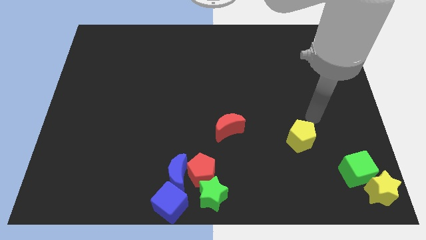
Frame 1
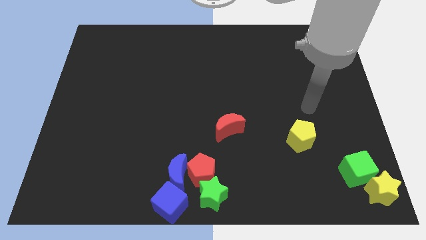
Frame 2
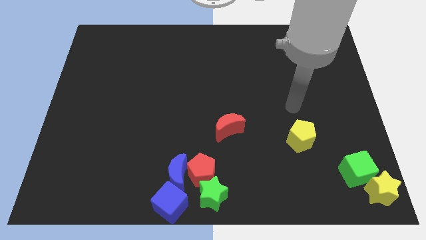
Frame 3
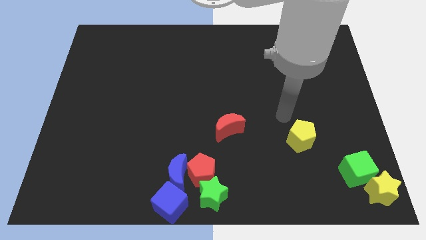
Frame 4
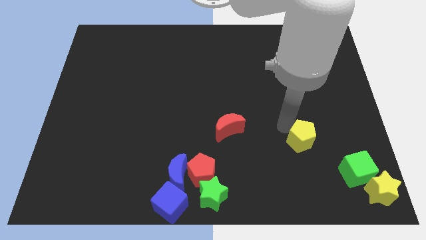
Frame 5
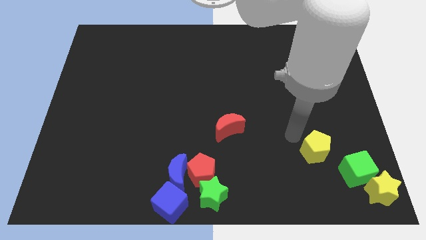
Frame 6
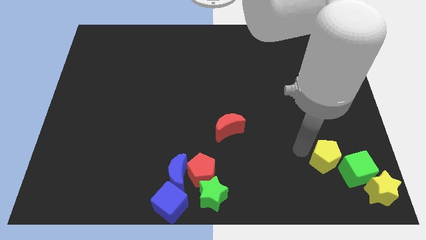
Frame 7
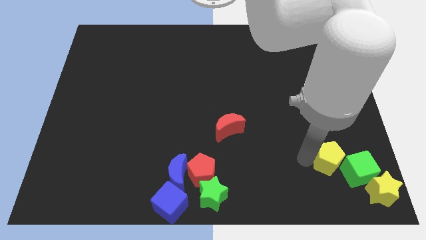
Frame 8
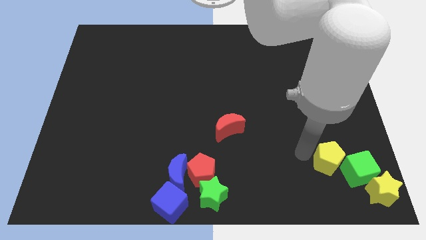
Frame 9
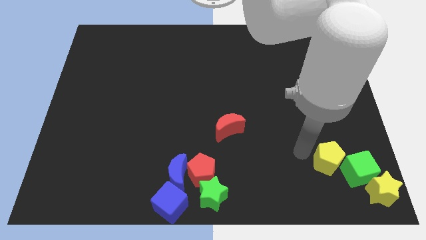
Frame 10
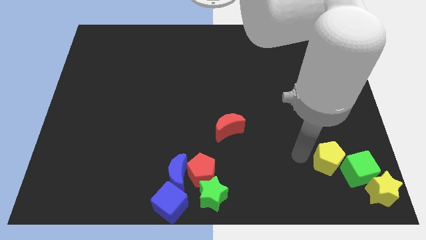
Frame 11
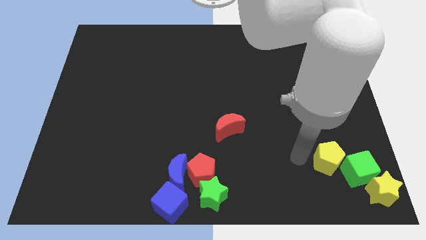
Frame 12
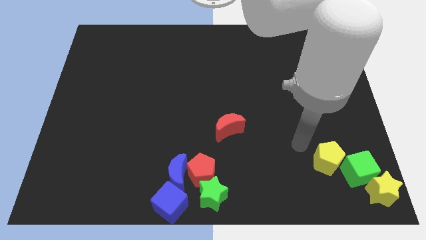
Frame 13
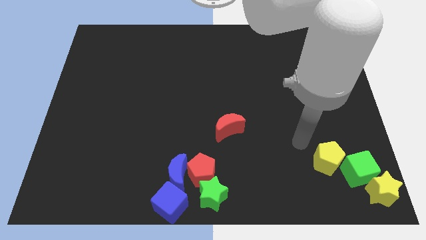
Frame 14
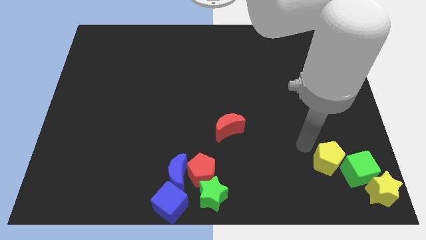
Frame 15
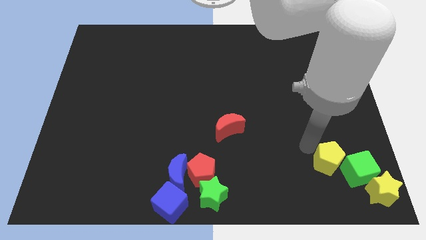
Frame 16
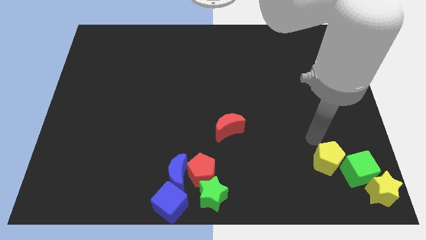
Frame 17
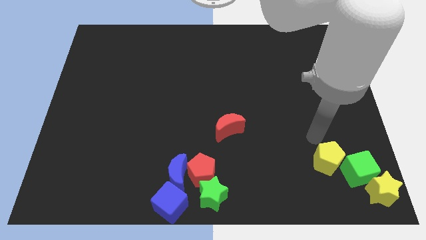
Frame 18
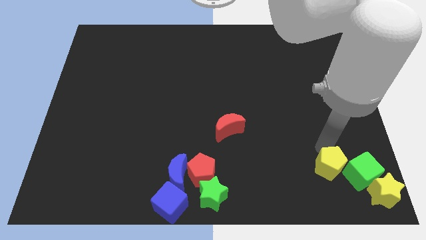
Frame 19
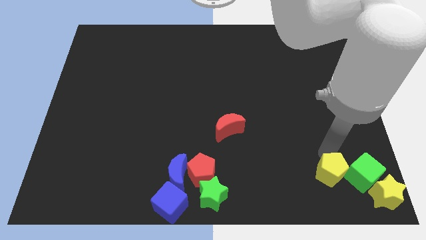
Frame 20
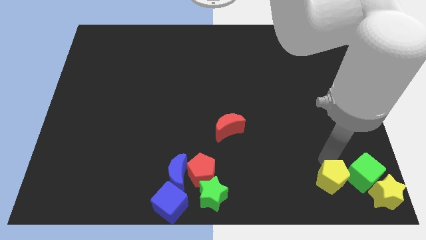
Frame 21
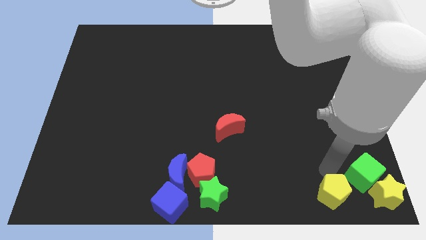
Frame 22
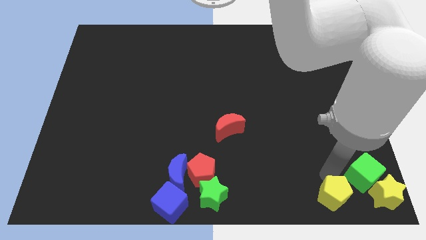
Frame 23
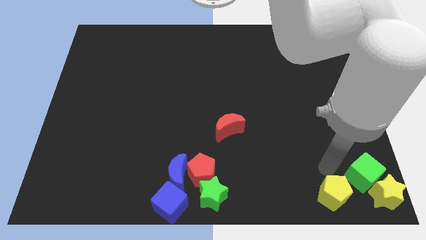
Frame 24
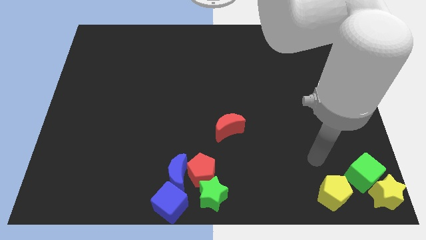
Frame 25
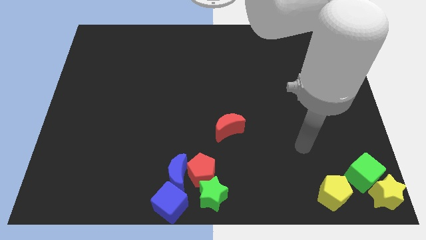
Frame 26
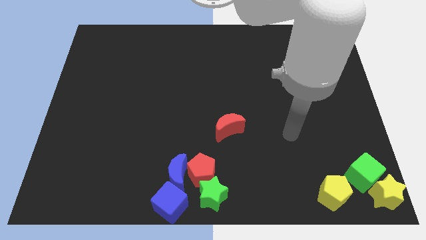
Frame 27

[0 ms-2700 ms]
move the yellow pentagon diagonally left of the green cube

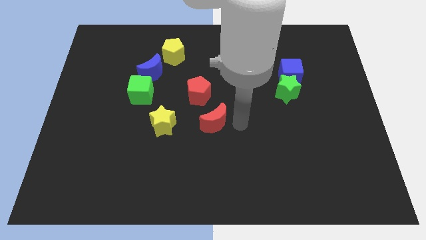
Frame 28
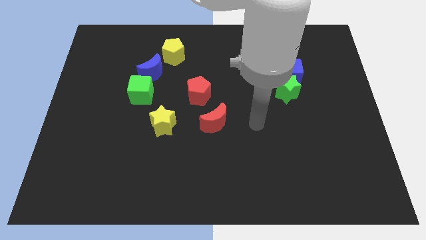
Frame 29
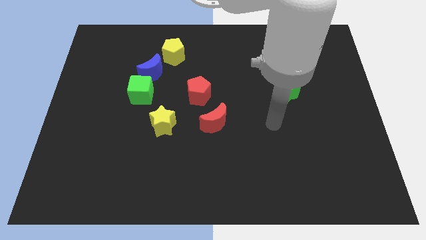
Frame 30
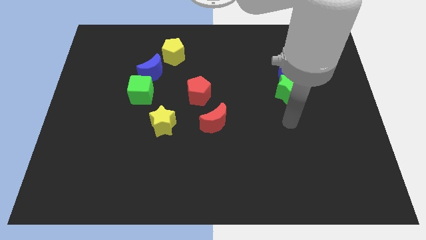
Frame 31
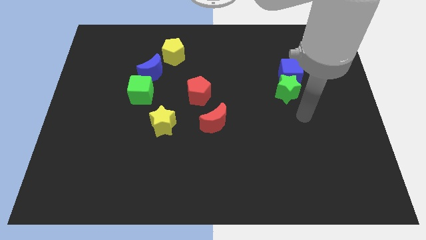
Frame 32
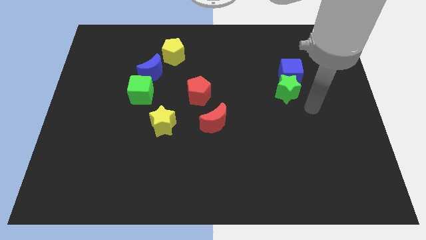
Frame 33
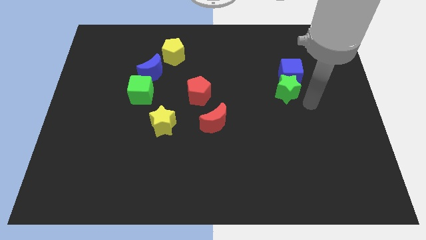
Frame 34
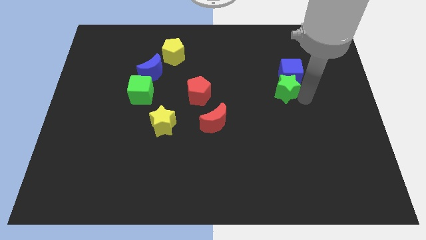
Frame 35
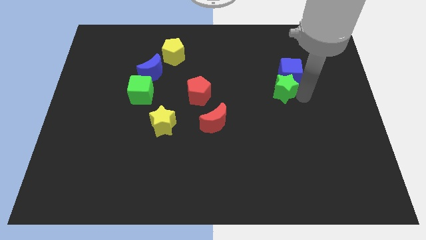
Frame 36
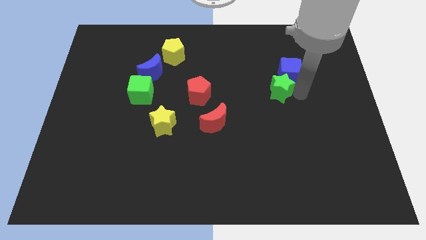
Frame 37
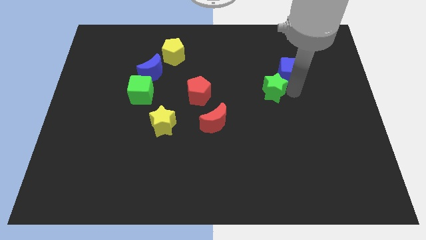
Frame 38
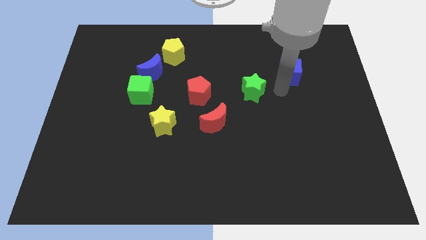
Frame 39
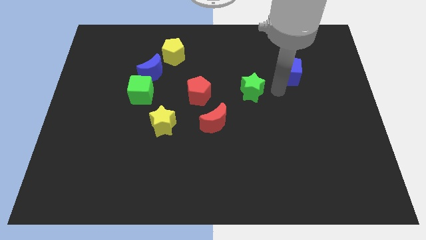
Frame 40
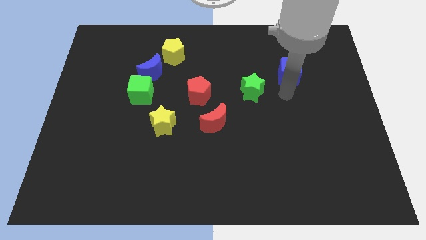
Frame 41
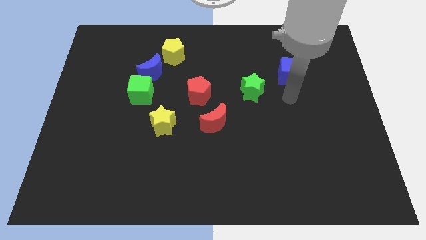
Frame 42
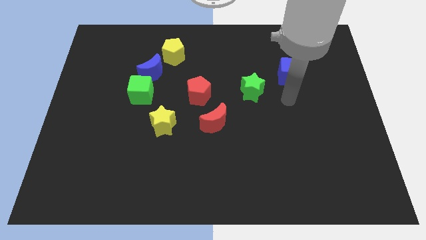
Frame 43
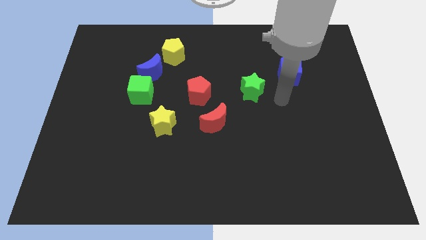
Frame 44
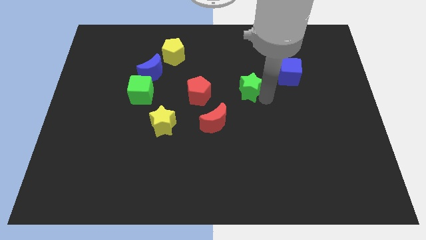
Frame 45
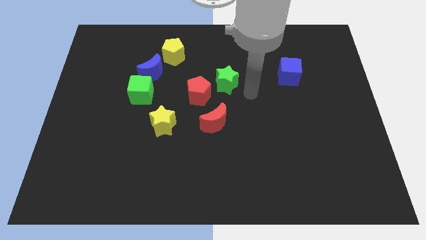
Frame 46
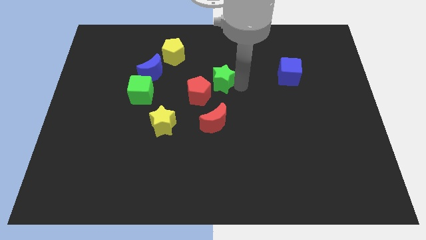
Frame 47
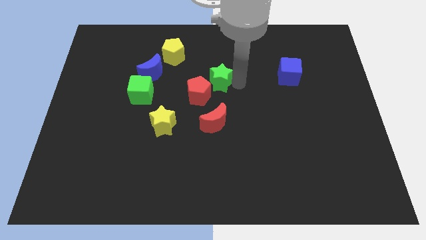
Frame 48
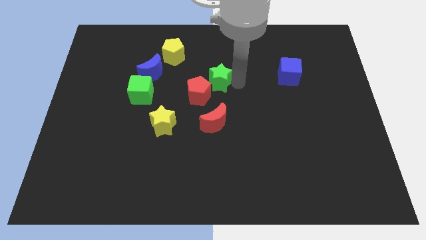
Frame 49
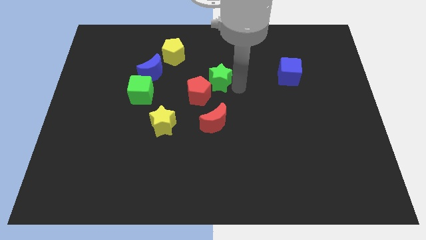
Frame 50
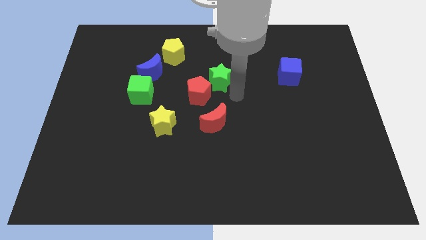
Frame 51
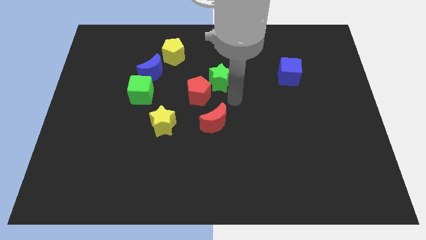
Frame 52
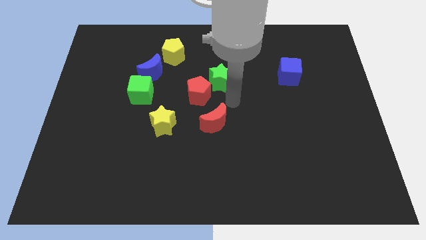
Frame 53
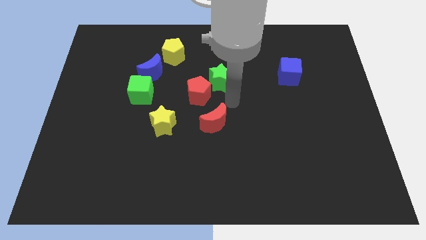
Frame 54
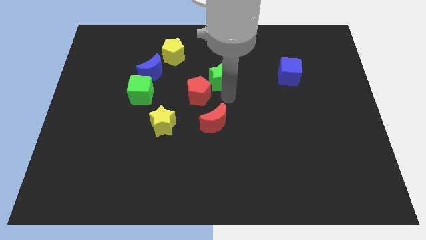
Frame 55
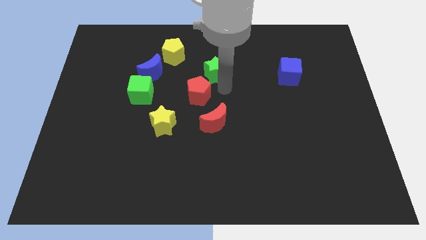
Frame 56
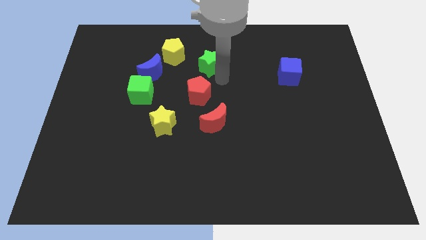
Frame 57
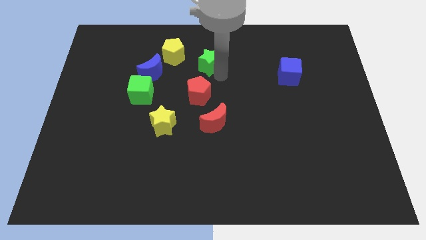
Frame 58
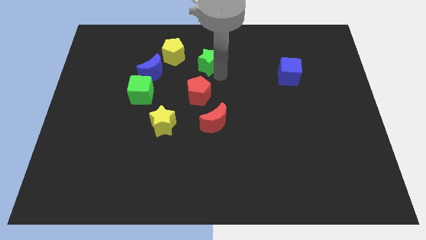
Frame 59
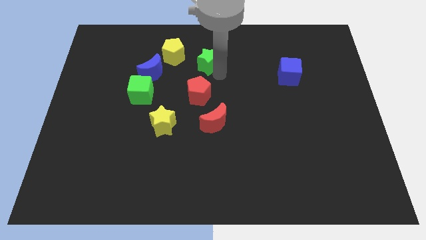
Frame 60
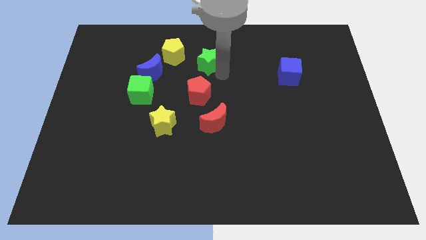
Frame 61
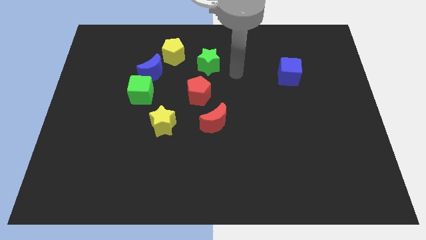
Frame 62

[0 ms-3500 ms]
push the green star vertically on the top side of the red pentagon

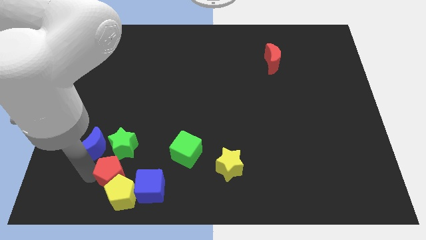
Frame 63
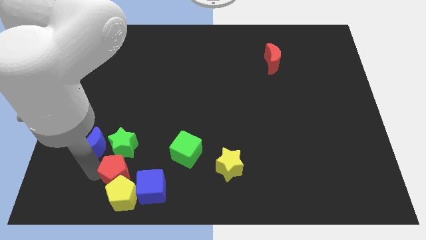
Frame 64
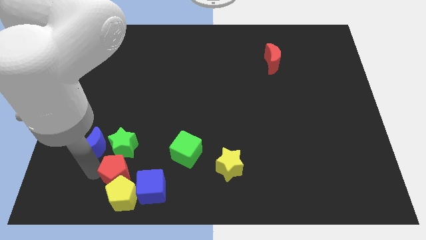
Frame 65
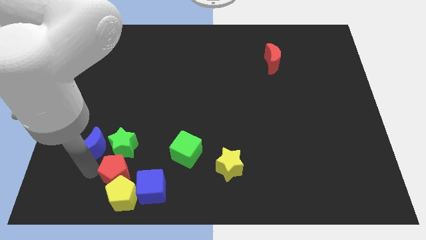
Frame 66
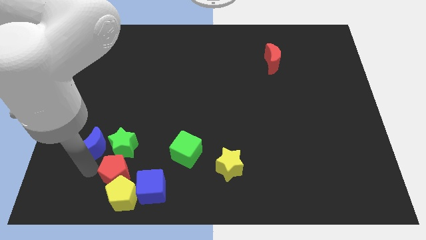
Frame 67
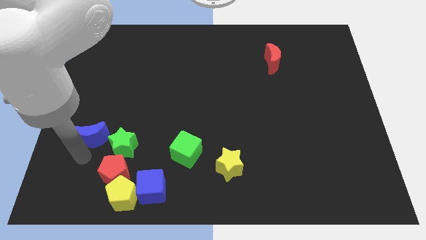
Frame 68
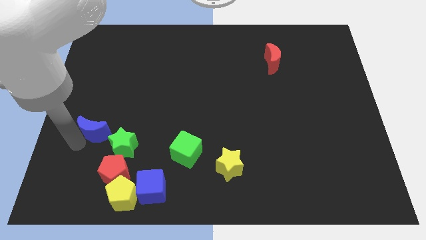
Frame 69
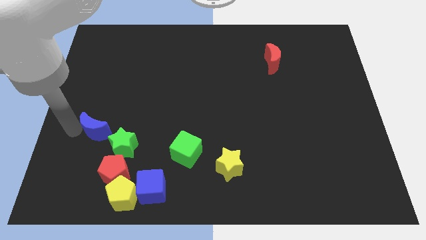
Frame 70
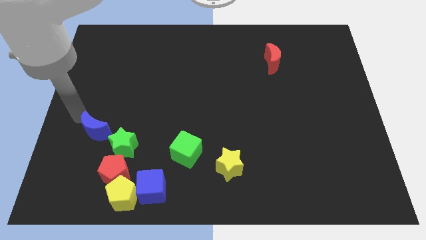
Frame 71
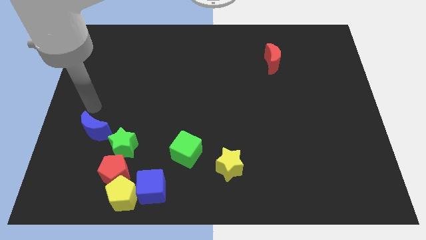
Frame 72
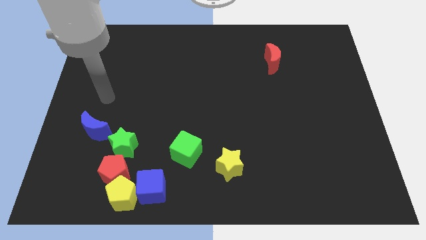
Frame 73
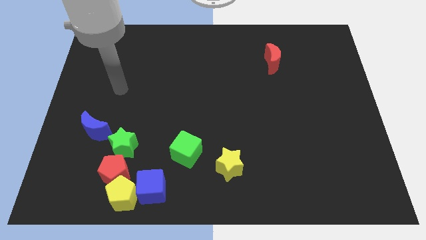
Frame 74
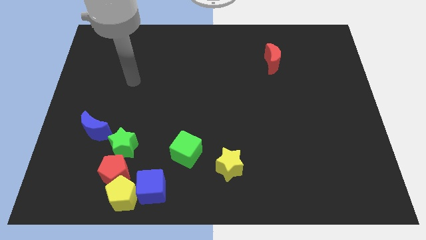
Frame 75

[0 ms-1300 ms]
slightly move the blue moon up

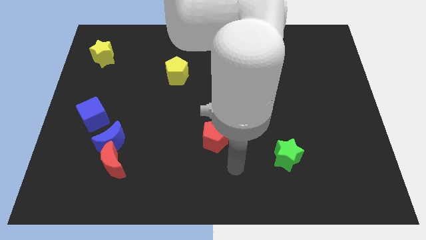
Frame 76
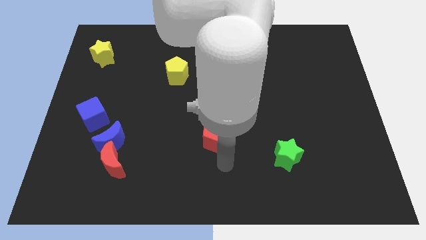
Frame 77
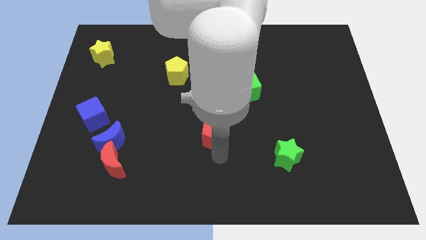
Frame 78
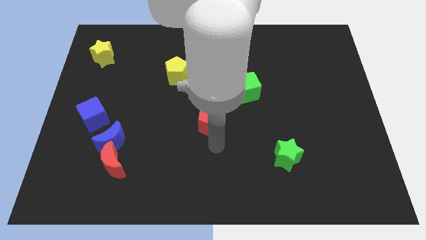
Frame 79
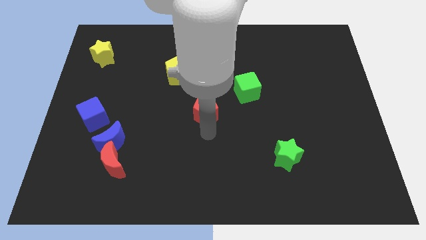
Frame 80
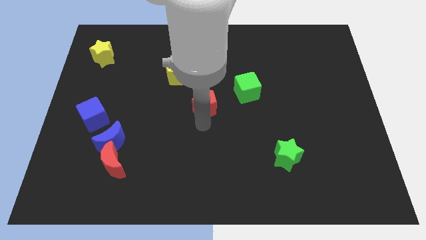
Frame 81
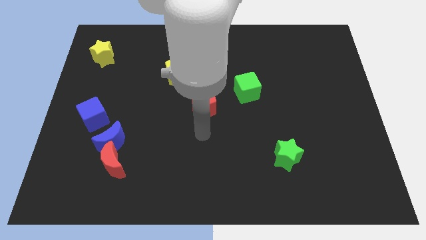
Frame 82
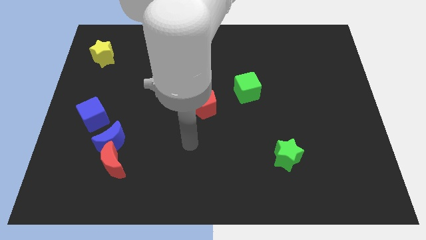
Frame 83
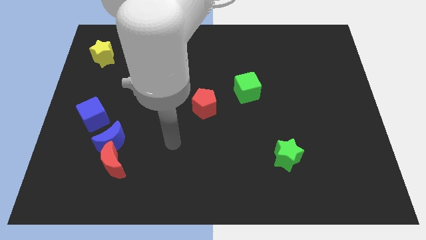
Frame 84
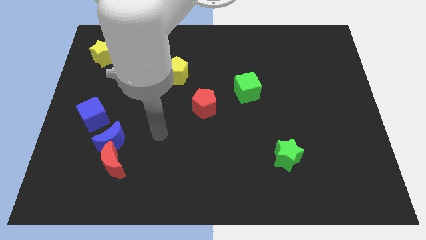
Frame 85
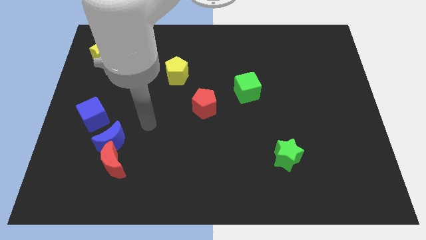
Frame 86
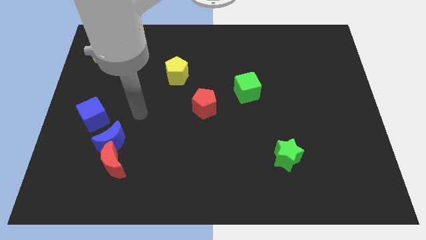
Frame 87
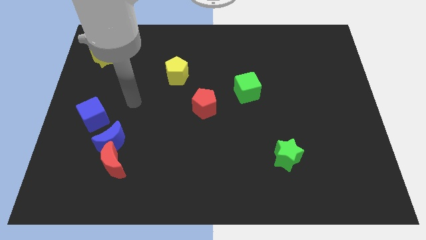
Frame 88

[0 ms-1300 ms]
move the red pentagon to the left of the green cube
